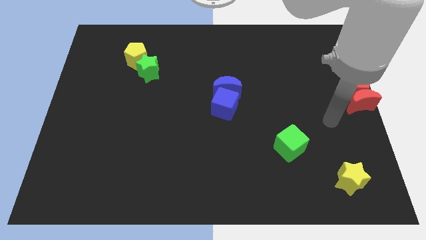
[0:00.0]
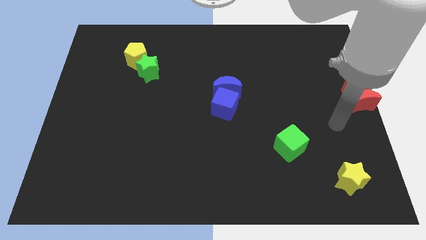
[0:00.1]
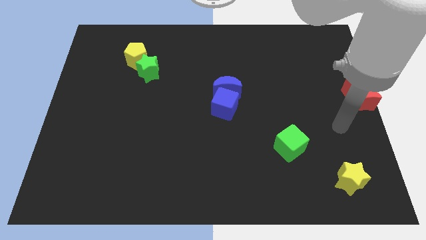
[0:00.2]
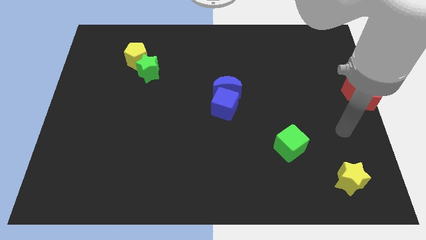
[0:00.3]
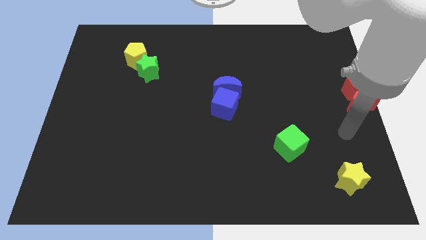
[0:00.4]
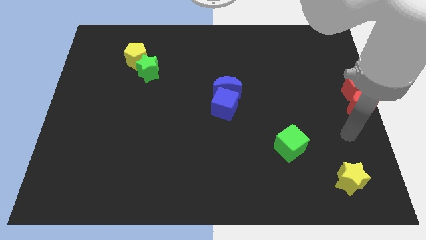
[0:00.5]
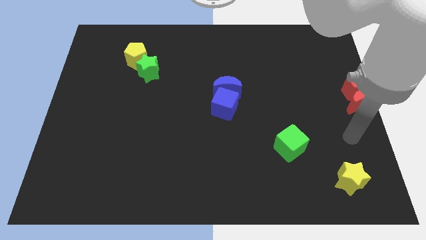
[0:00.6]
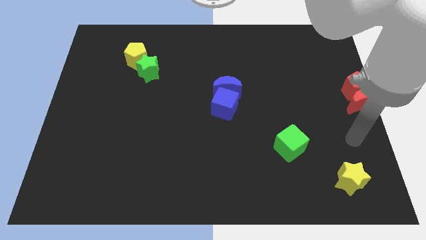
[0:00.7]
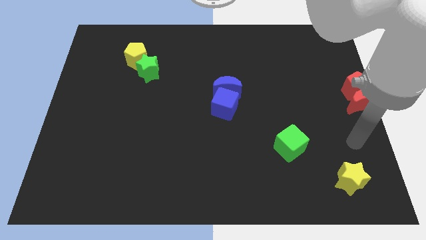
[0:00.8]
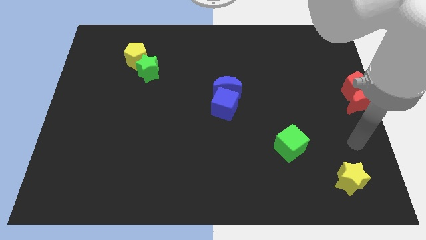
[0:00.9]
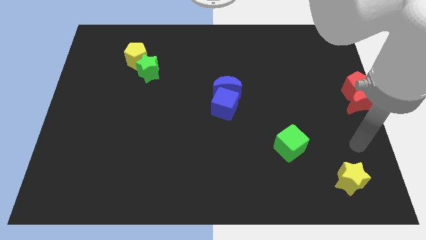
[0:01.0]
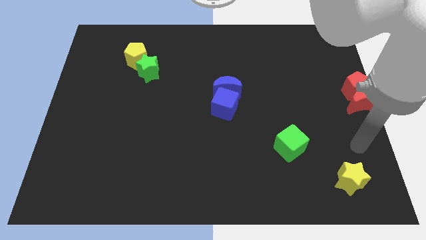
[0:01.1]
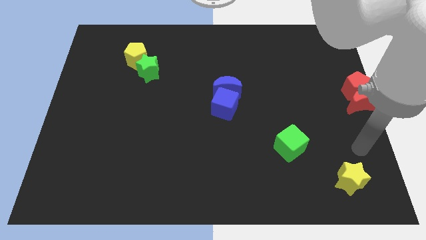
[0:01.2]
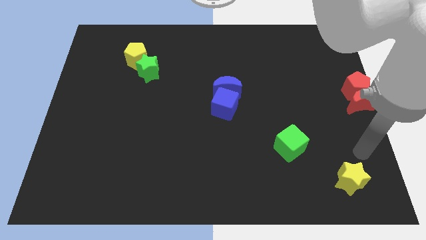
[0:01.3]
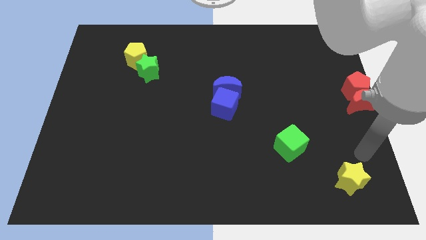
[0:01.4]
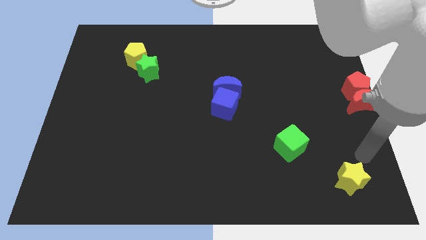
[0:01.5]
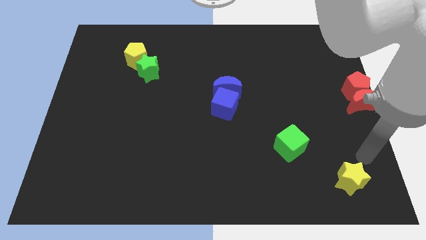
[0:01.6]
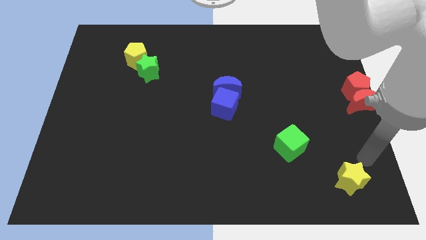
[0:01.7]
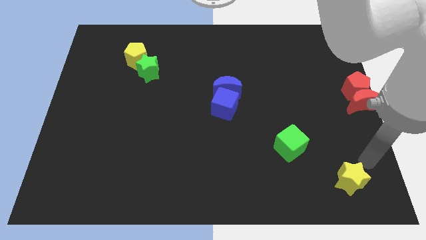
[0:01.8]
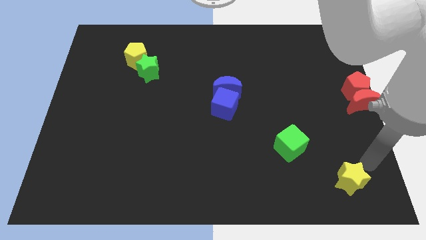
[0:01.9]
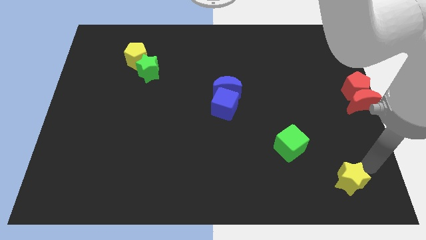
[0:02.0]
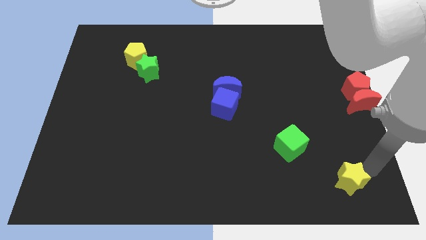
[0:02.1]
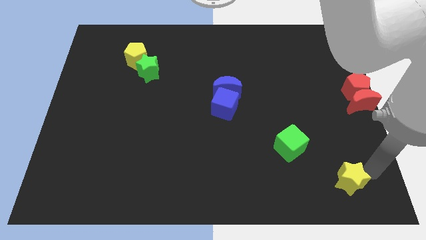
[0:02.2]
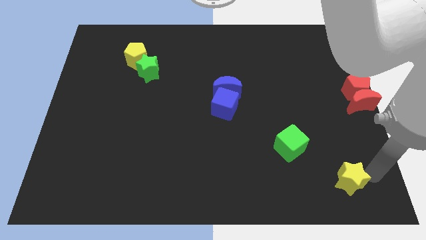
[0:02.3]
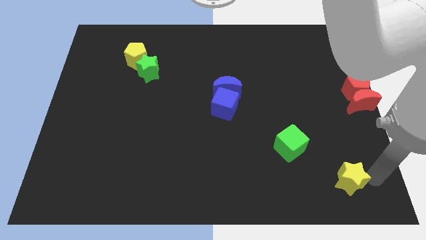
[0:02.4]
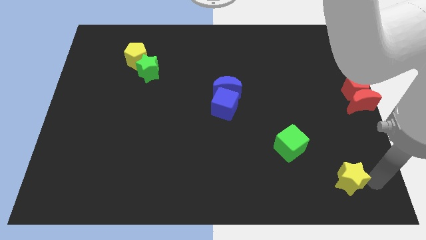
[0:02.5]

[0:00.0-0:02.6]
move your hand close to the yellow star

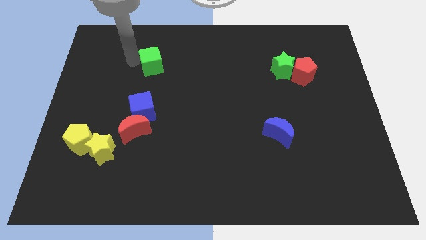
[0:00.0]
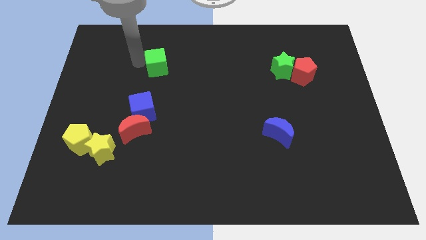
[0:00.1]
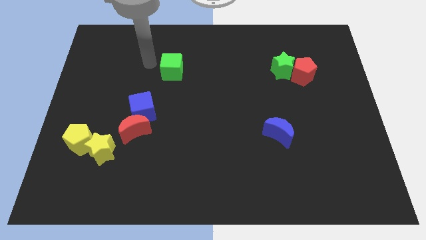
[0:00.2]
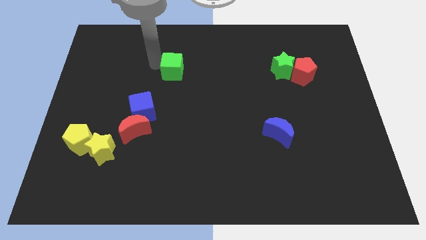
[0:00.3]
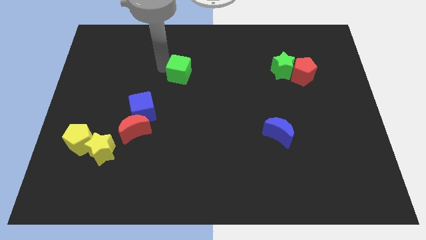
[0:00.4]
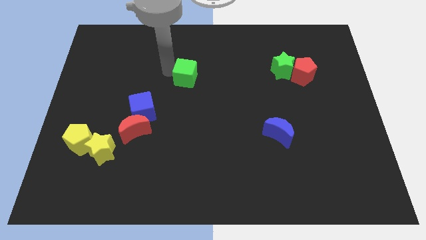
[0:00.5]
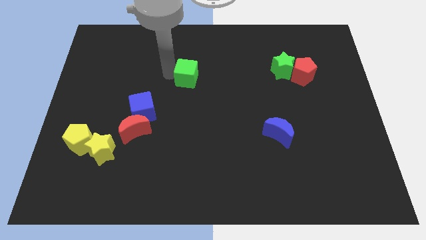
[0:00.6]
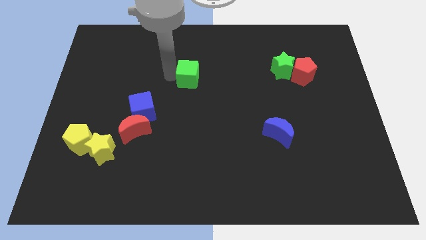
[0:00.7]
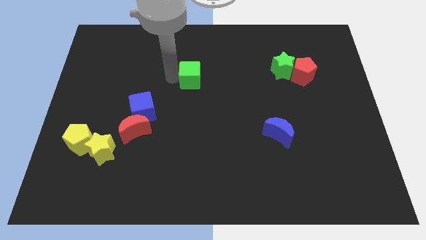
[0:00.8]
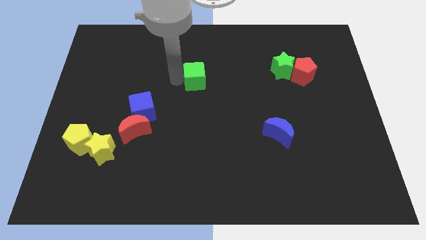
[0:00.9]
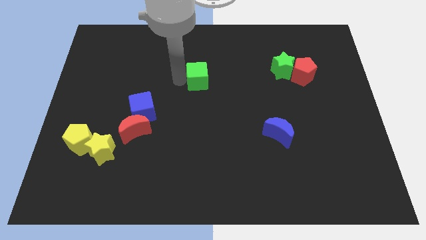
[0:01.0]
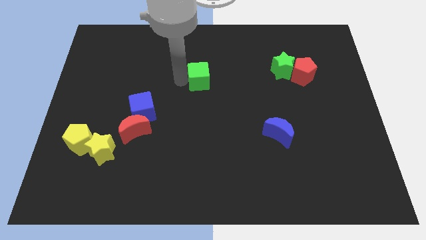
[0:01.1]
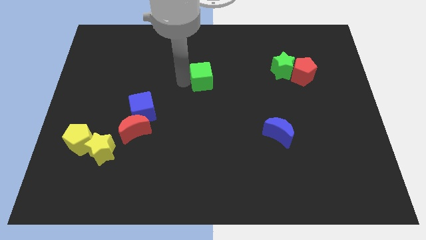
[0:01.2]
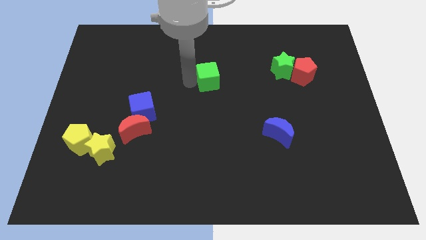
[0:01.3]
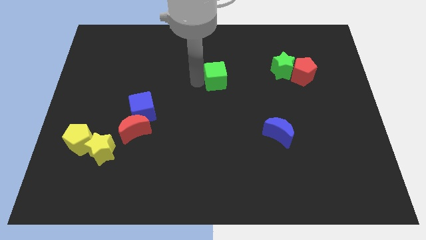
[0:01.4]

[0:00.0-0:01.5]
move the green cube slightly to the right side of the board

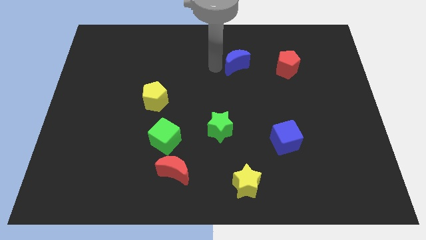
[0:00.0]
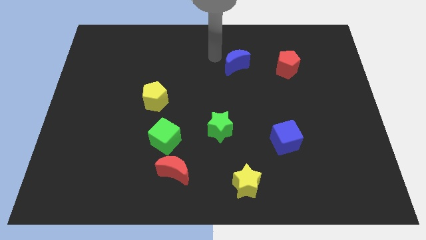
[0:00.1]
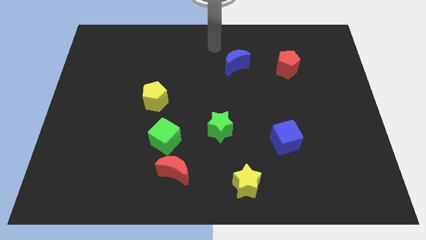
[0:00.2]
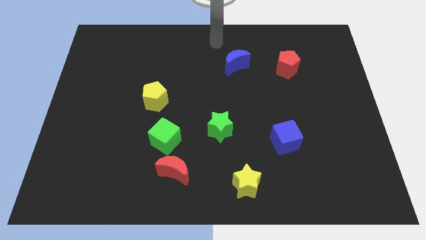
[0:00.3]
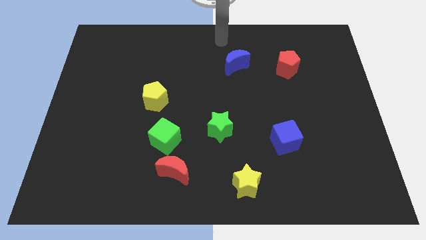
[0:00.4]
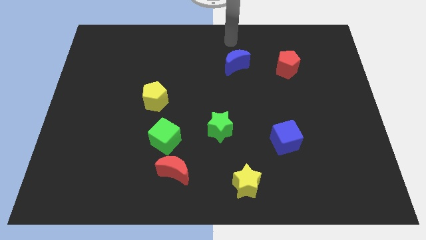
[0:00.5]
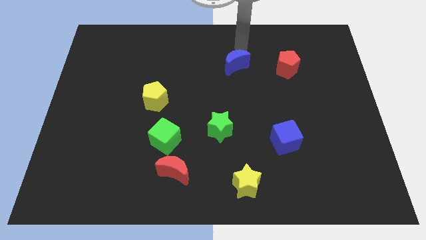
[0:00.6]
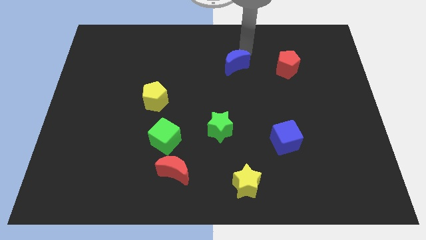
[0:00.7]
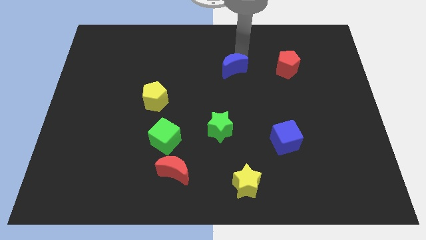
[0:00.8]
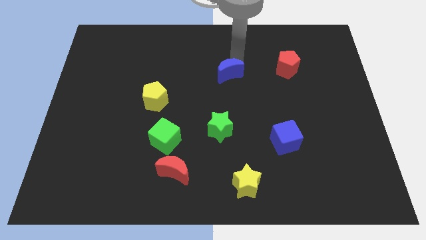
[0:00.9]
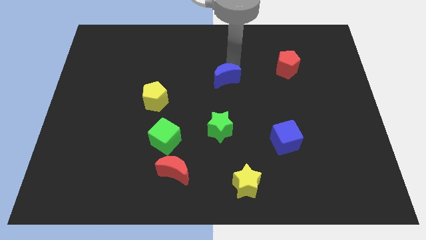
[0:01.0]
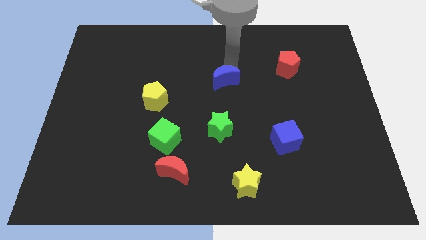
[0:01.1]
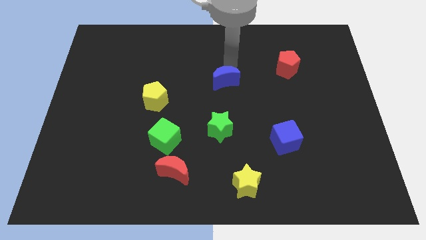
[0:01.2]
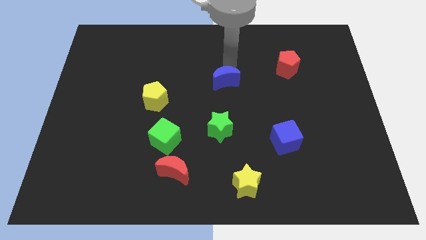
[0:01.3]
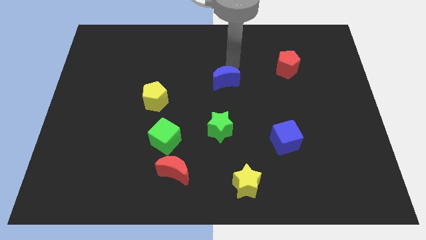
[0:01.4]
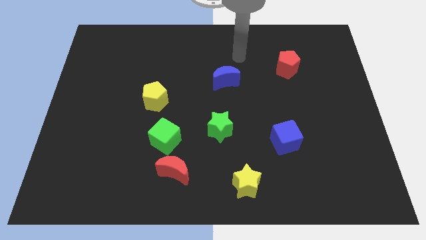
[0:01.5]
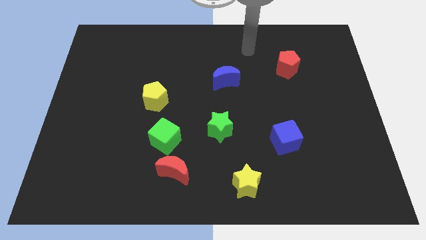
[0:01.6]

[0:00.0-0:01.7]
push blue moon downwards

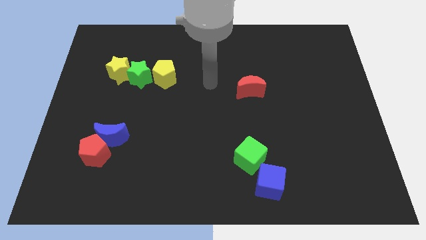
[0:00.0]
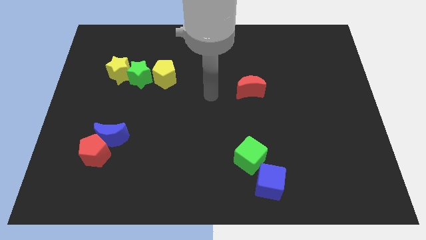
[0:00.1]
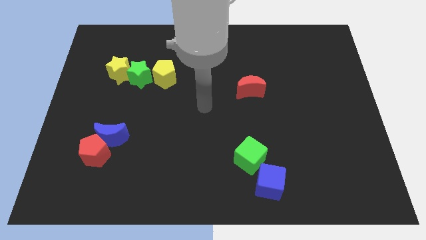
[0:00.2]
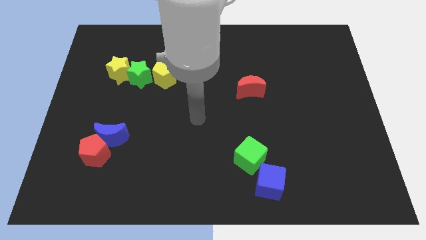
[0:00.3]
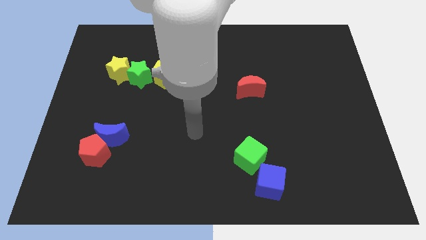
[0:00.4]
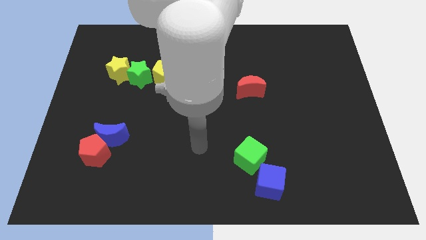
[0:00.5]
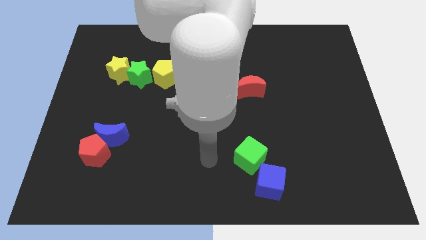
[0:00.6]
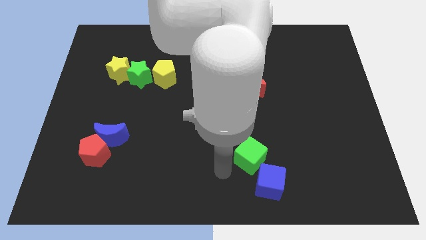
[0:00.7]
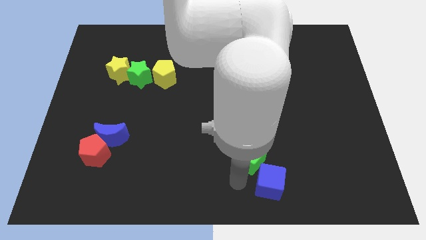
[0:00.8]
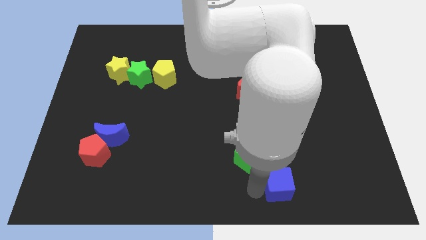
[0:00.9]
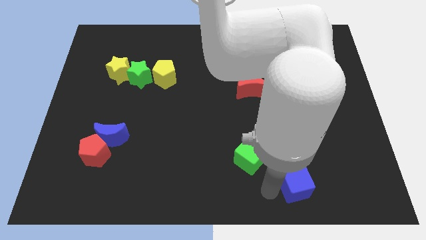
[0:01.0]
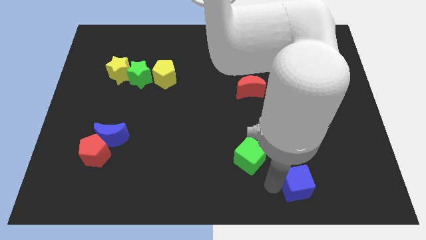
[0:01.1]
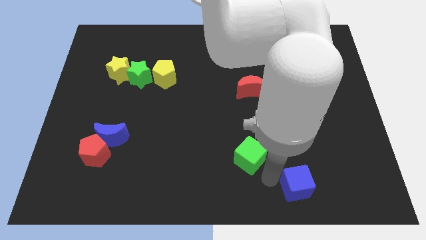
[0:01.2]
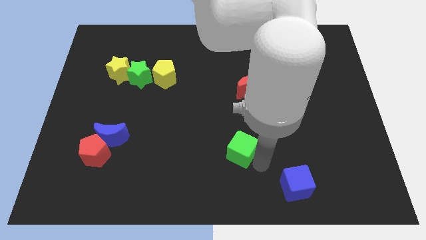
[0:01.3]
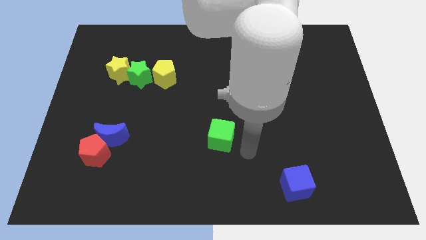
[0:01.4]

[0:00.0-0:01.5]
separate the blue cube and green cube

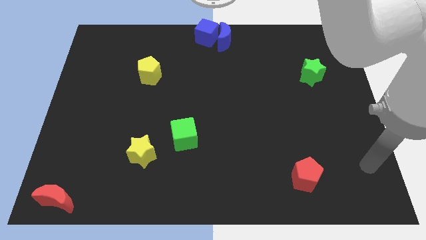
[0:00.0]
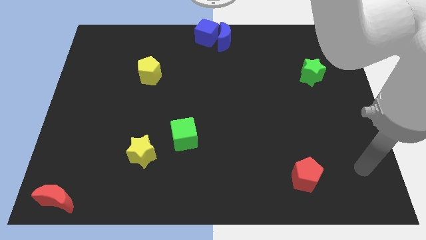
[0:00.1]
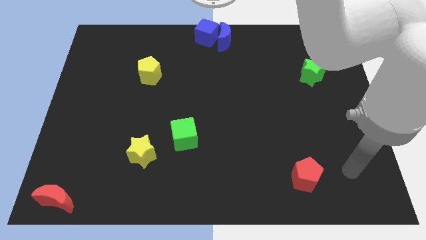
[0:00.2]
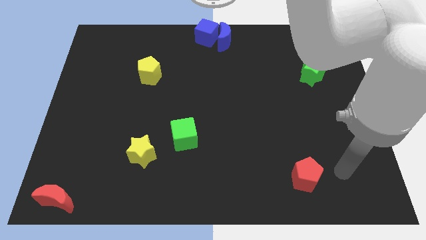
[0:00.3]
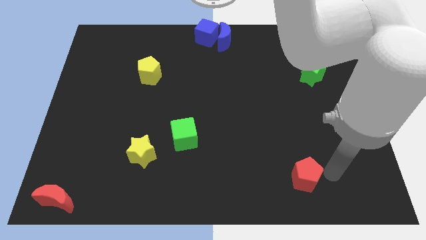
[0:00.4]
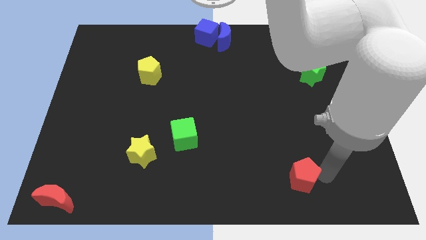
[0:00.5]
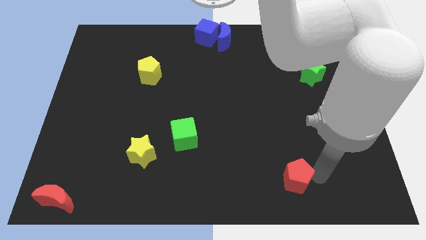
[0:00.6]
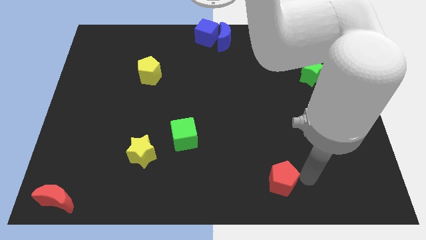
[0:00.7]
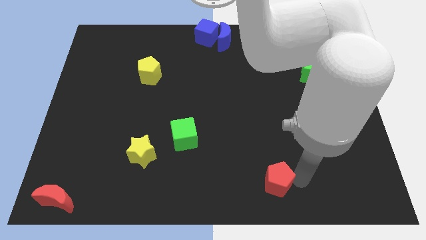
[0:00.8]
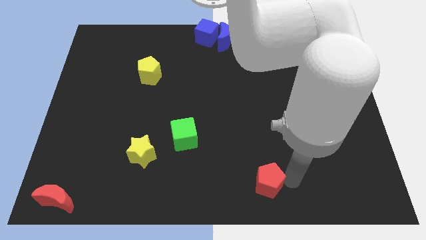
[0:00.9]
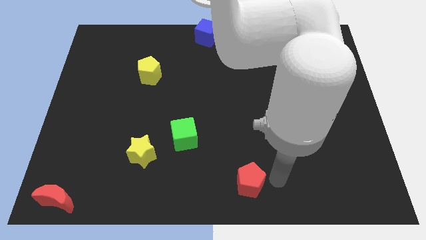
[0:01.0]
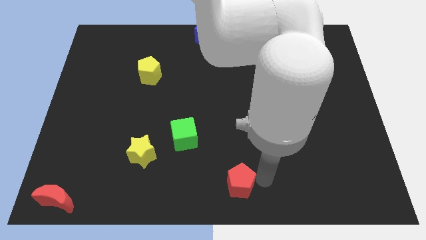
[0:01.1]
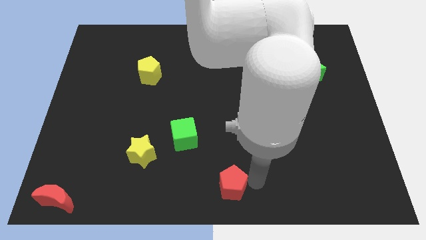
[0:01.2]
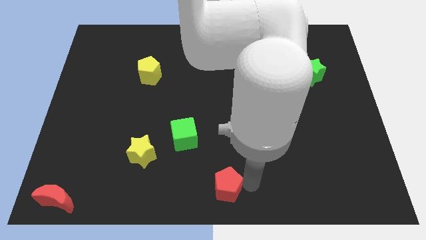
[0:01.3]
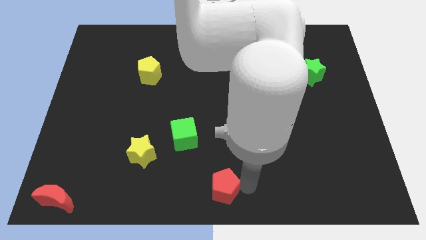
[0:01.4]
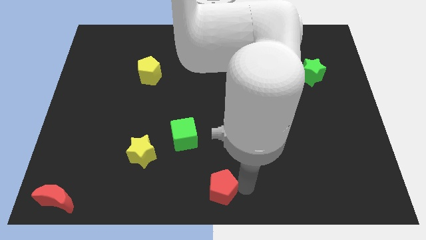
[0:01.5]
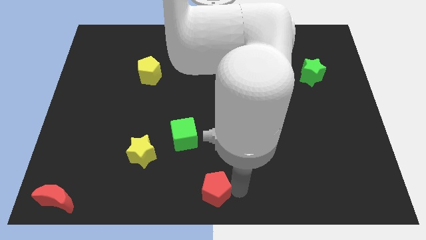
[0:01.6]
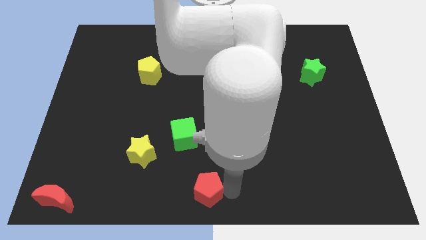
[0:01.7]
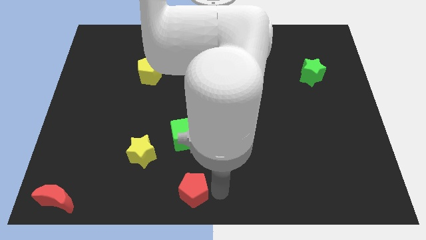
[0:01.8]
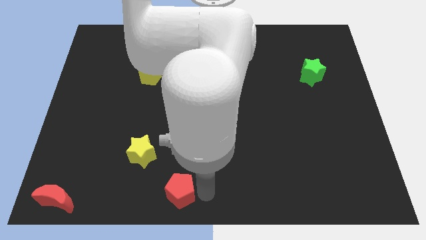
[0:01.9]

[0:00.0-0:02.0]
move the red pentagon below the green cube
